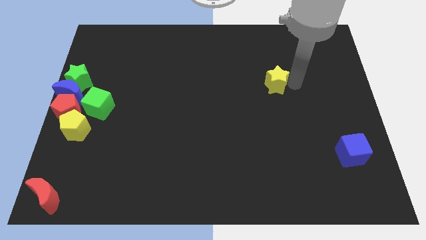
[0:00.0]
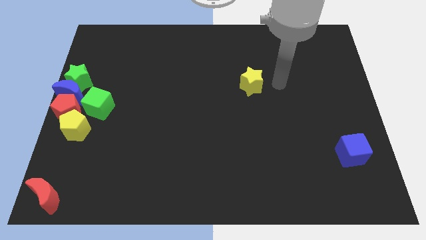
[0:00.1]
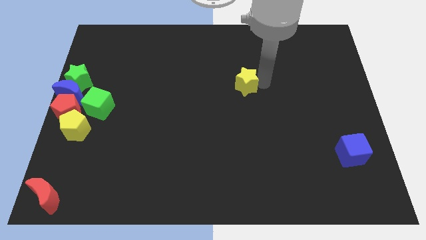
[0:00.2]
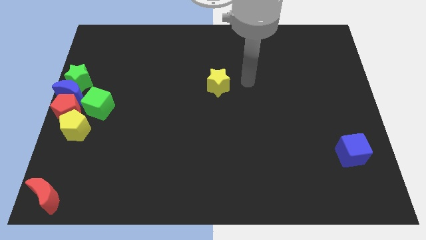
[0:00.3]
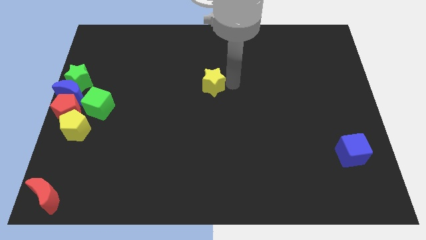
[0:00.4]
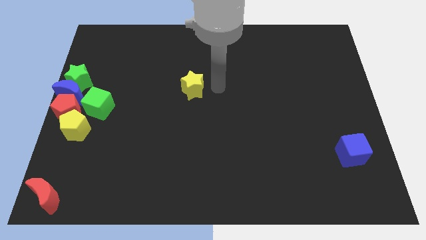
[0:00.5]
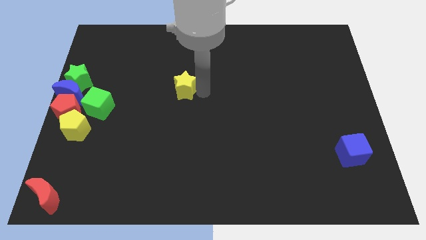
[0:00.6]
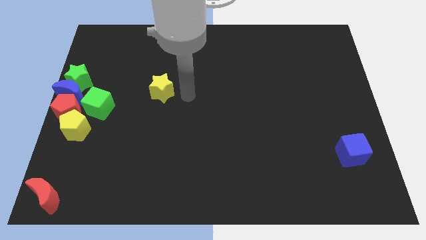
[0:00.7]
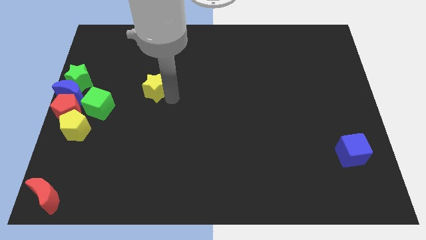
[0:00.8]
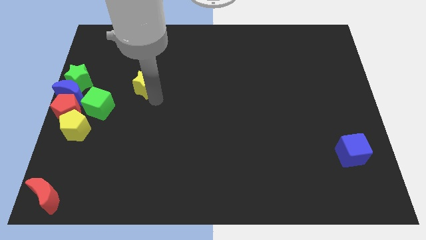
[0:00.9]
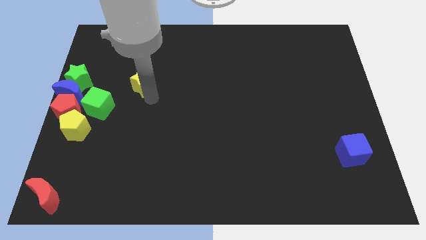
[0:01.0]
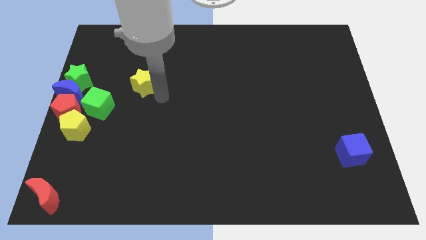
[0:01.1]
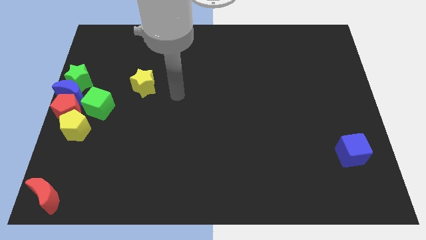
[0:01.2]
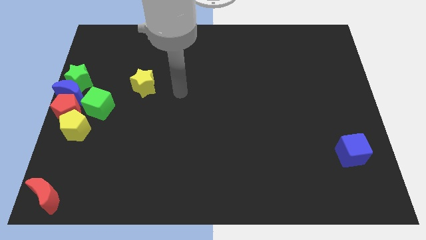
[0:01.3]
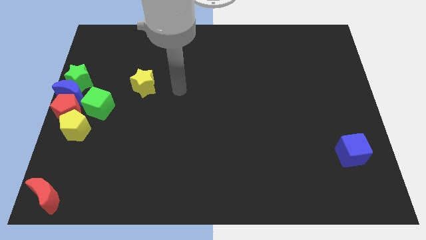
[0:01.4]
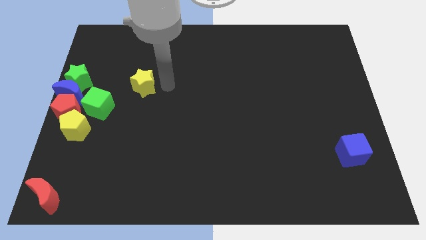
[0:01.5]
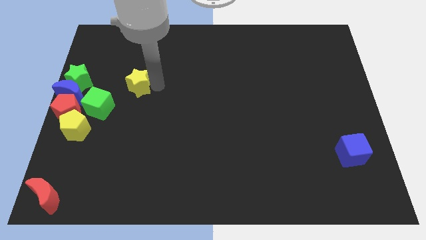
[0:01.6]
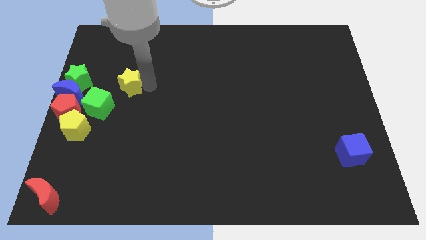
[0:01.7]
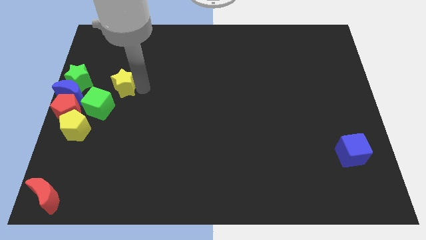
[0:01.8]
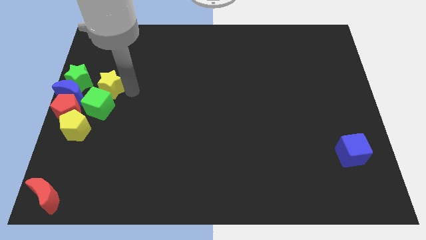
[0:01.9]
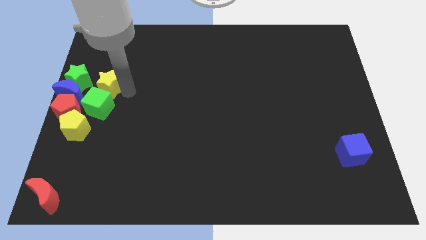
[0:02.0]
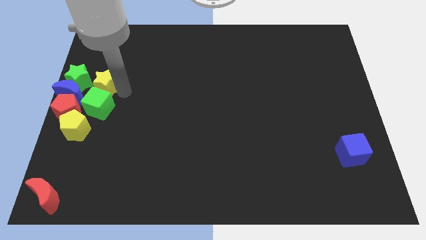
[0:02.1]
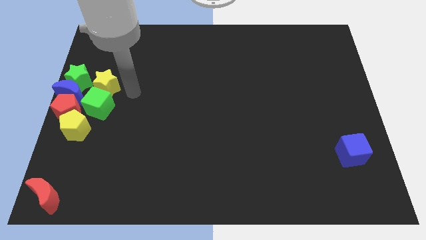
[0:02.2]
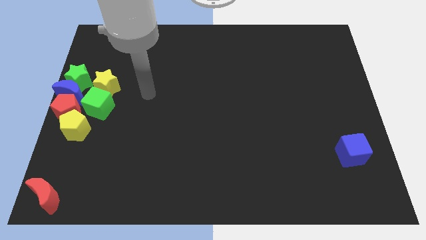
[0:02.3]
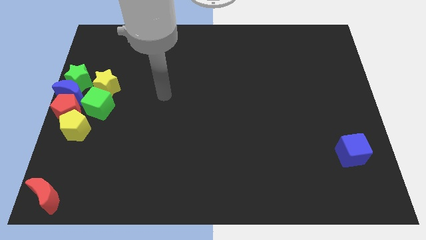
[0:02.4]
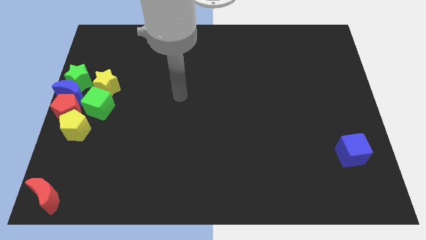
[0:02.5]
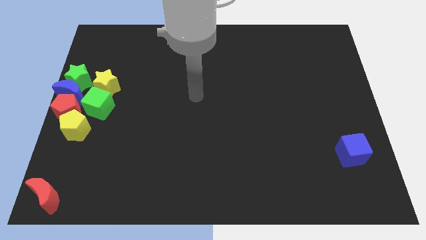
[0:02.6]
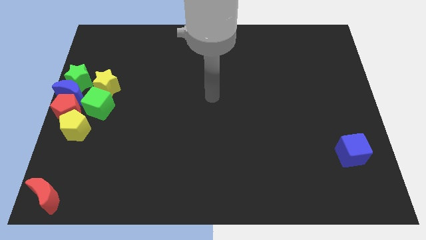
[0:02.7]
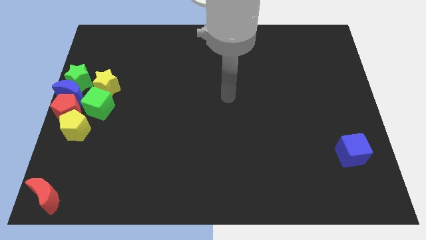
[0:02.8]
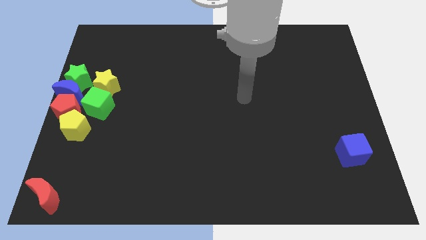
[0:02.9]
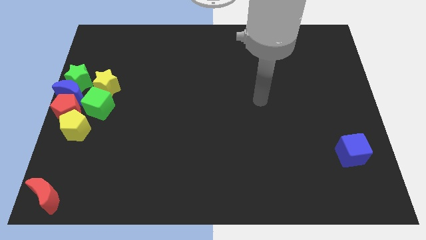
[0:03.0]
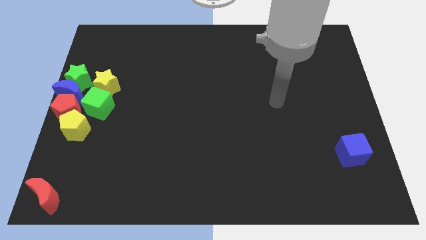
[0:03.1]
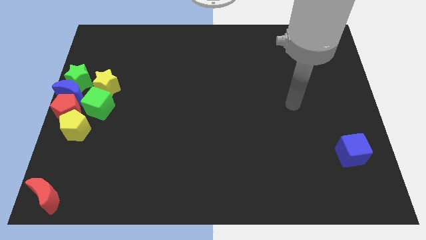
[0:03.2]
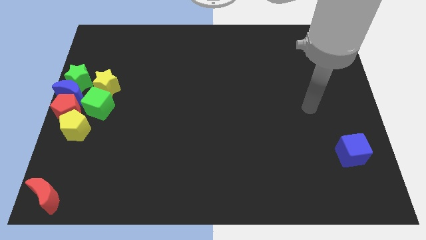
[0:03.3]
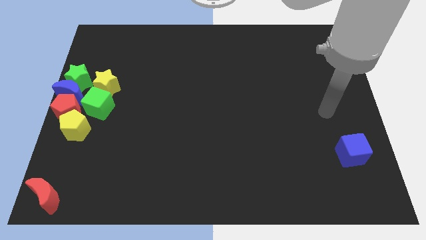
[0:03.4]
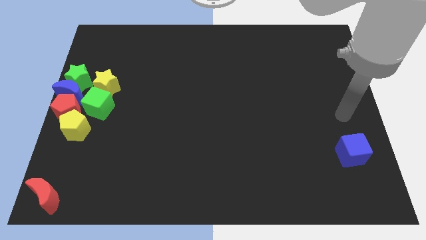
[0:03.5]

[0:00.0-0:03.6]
place the yellow star to the top of the green cube

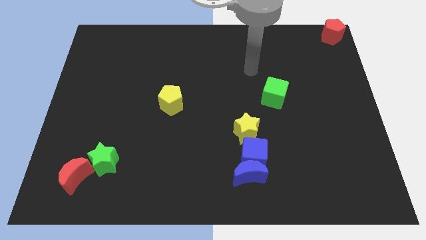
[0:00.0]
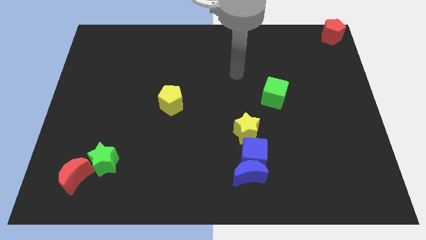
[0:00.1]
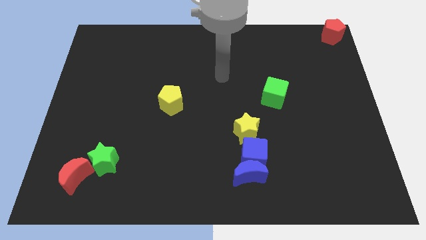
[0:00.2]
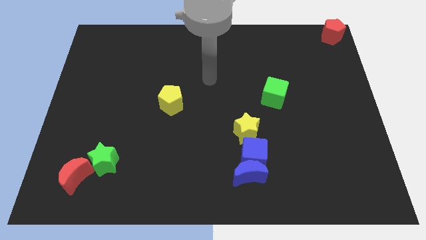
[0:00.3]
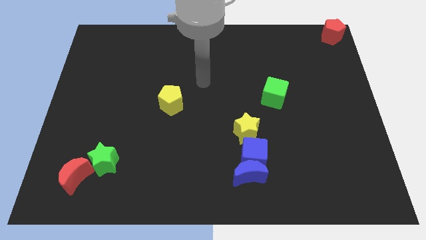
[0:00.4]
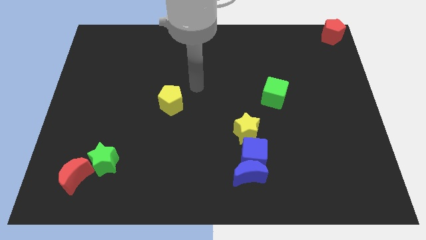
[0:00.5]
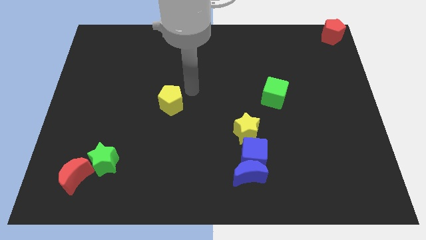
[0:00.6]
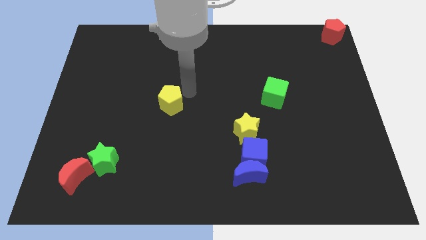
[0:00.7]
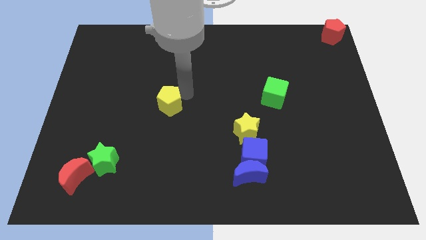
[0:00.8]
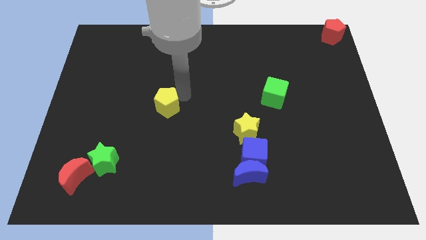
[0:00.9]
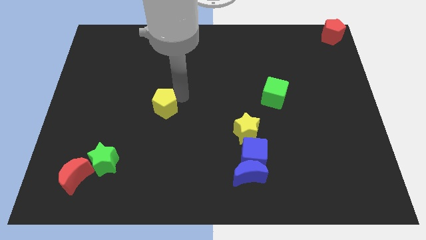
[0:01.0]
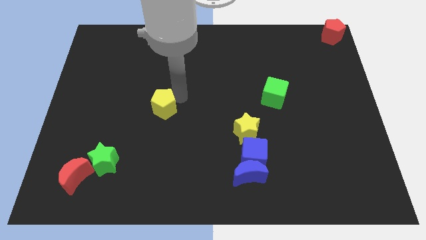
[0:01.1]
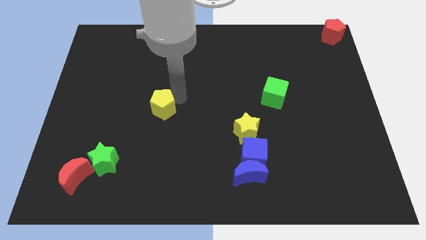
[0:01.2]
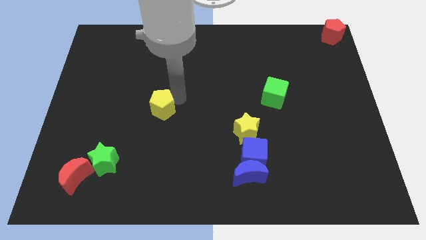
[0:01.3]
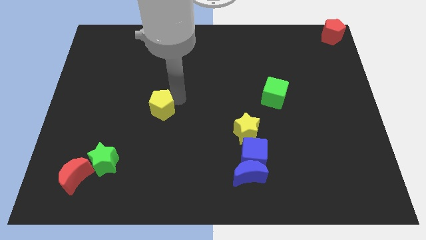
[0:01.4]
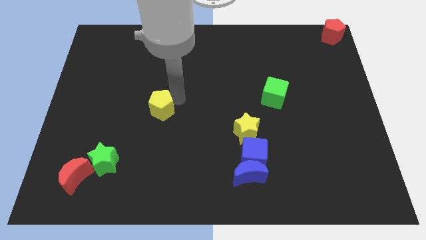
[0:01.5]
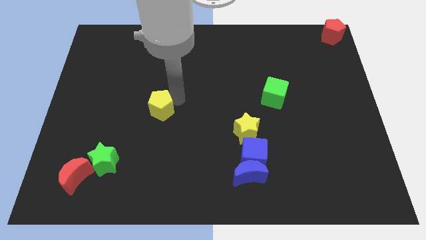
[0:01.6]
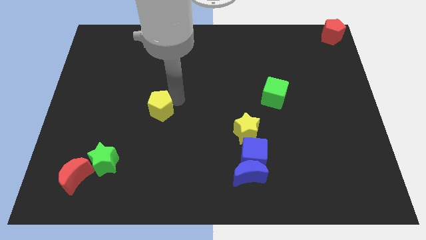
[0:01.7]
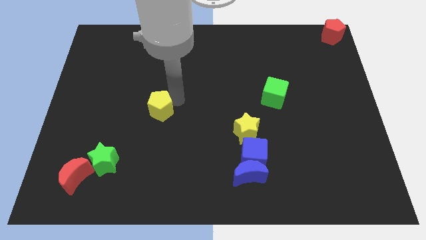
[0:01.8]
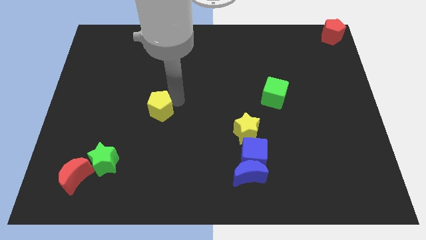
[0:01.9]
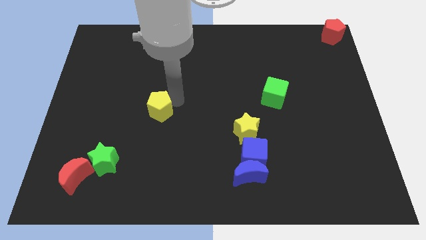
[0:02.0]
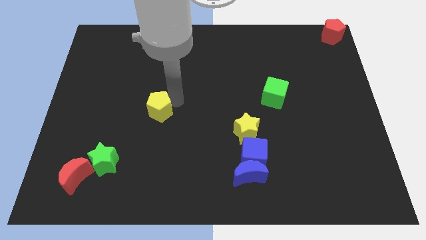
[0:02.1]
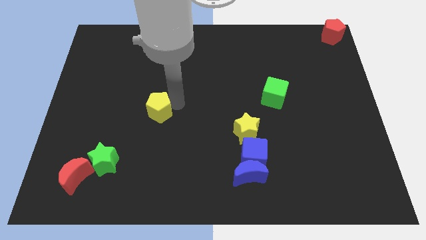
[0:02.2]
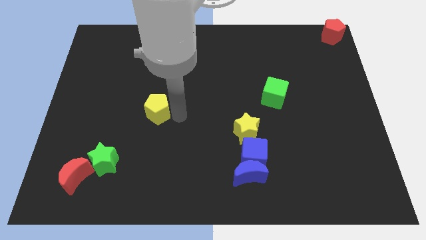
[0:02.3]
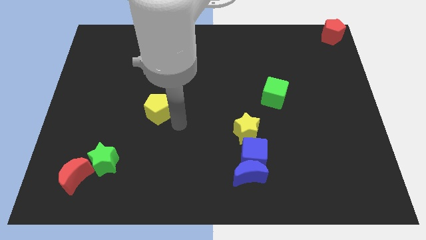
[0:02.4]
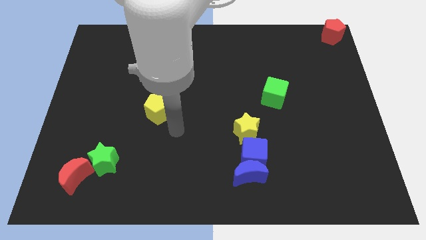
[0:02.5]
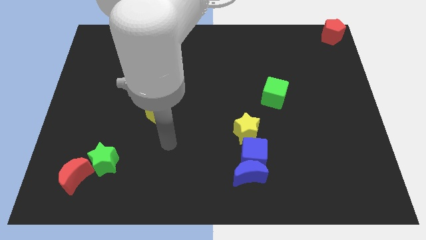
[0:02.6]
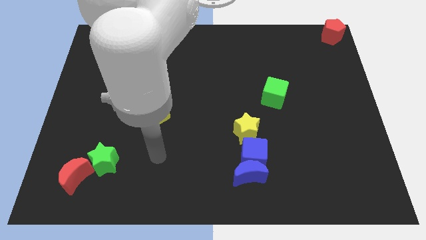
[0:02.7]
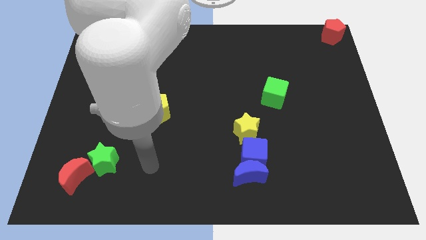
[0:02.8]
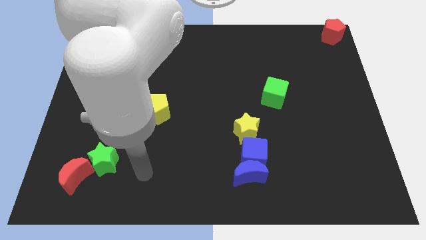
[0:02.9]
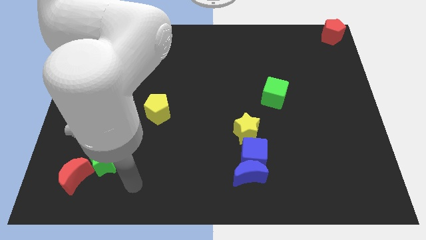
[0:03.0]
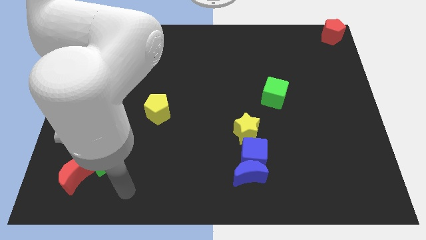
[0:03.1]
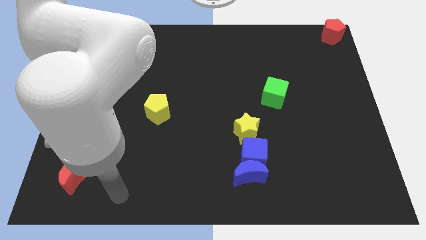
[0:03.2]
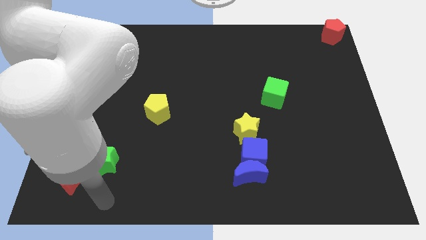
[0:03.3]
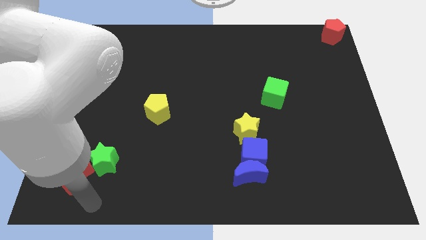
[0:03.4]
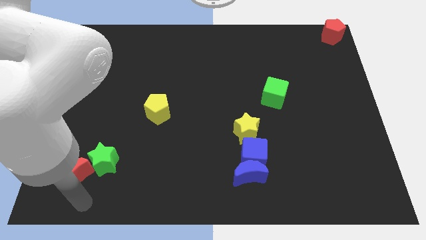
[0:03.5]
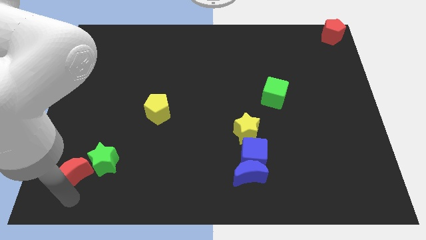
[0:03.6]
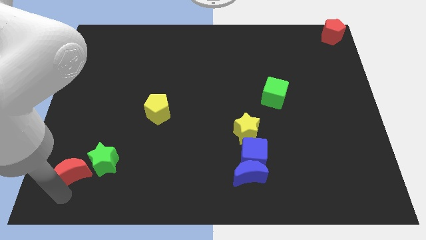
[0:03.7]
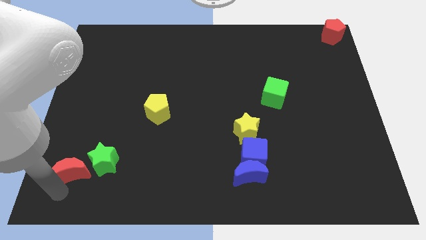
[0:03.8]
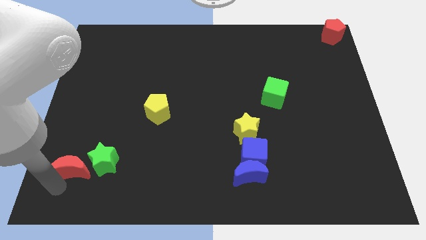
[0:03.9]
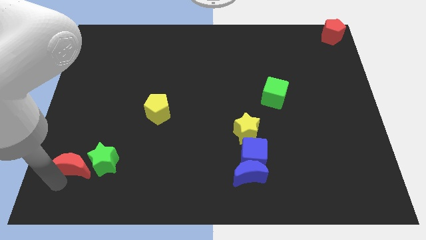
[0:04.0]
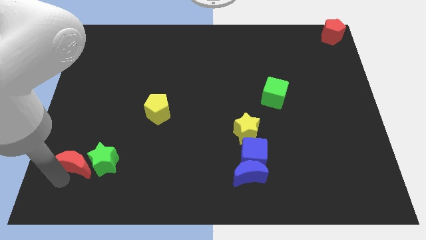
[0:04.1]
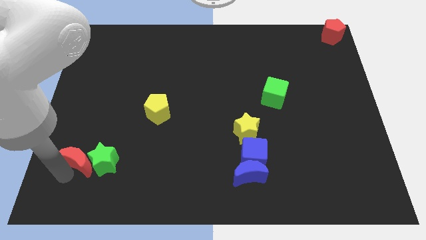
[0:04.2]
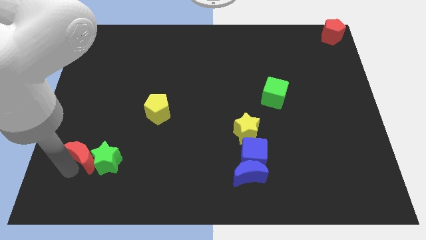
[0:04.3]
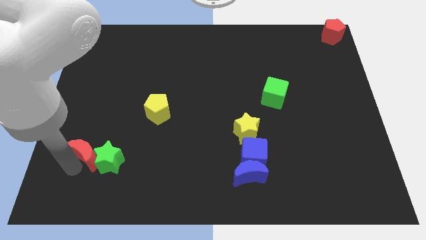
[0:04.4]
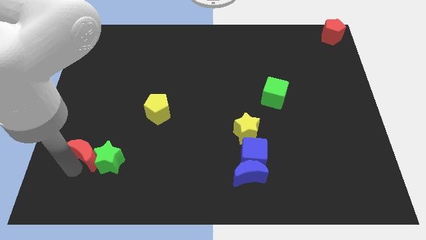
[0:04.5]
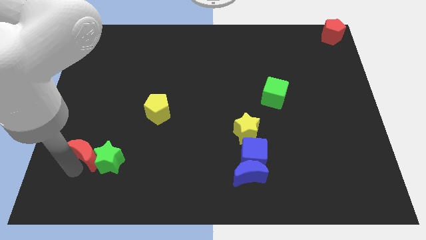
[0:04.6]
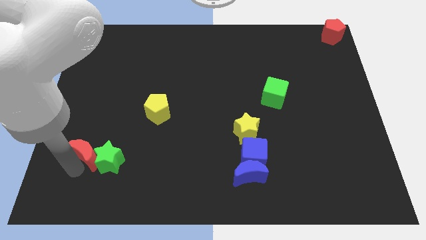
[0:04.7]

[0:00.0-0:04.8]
move the red moon upwards

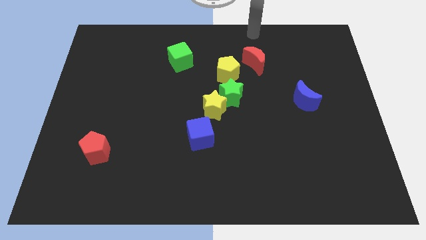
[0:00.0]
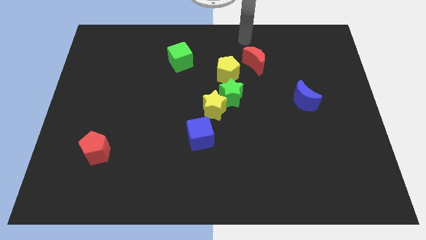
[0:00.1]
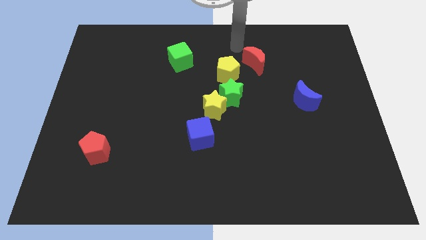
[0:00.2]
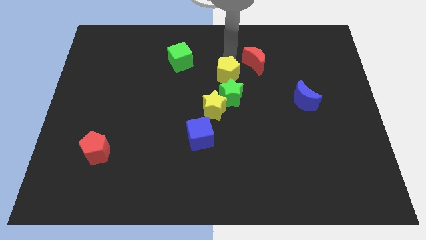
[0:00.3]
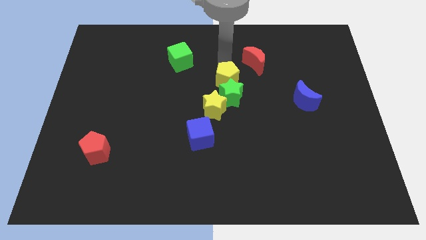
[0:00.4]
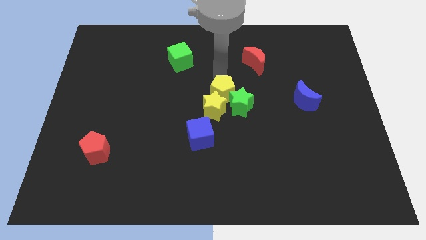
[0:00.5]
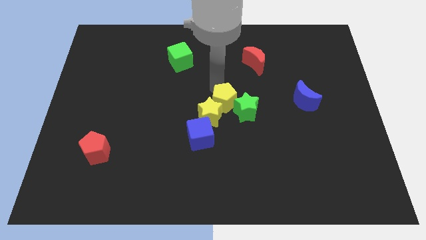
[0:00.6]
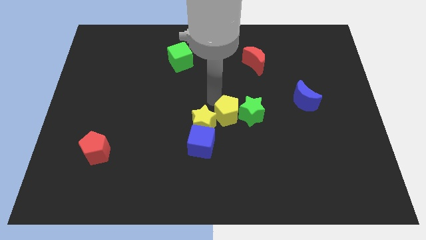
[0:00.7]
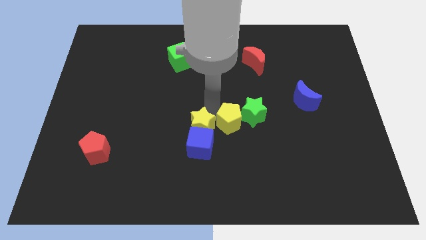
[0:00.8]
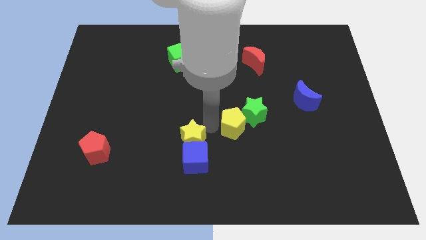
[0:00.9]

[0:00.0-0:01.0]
push the yellow pentagon between the green and yellow star
